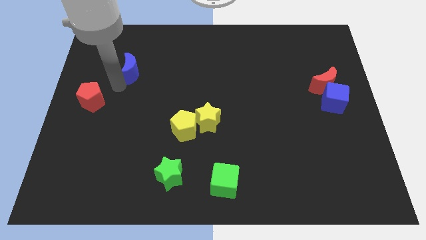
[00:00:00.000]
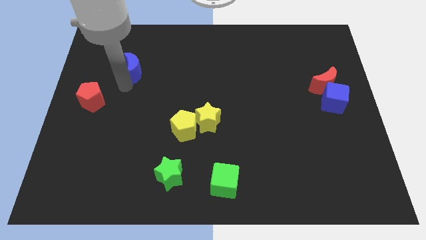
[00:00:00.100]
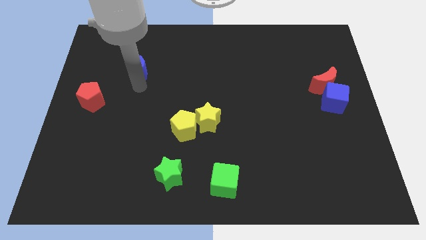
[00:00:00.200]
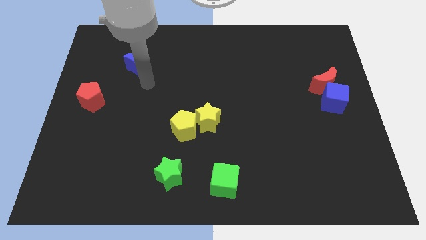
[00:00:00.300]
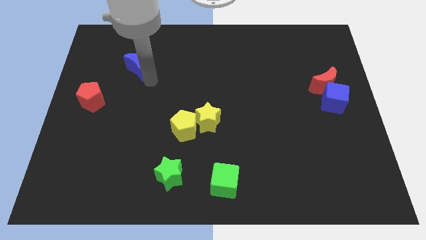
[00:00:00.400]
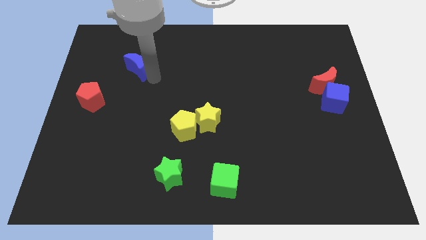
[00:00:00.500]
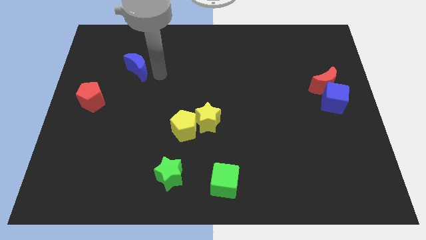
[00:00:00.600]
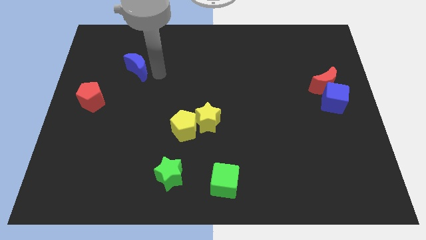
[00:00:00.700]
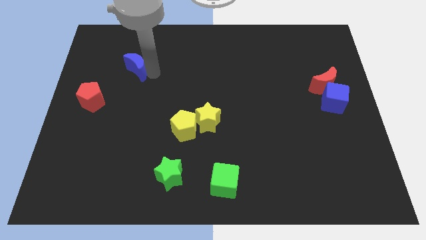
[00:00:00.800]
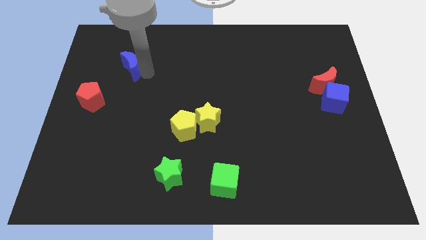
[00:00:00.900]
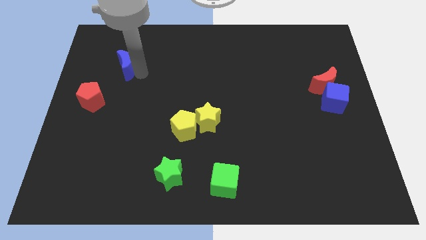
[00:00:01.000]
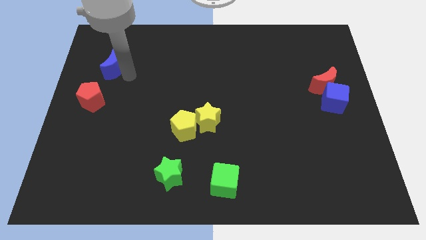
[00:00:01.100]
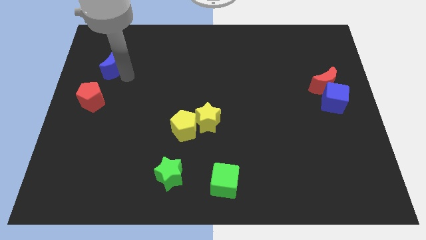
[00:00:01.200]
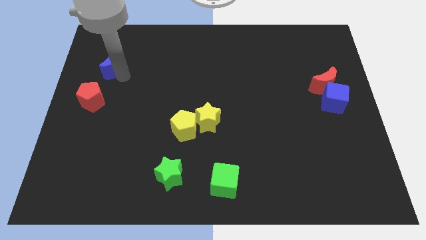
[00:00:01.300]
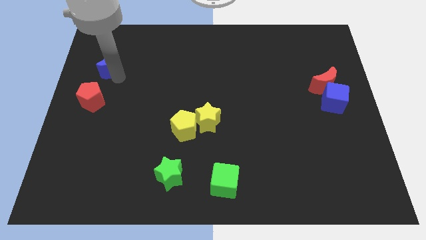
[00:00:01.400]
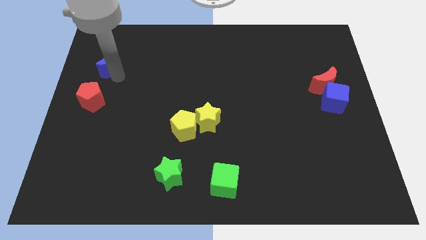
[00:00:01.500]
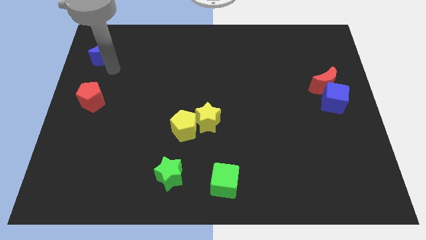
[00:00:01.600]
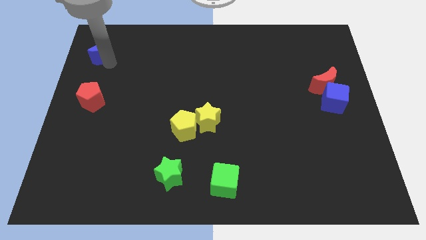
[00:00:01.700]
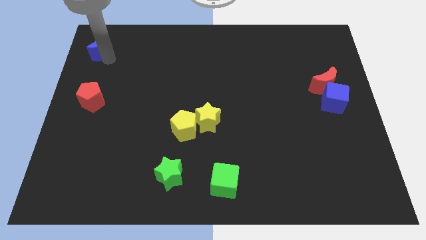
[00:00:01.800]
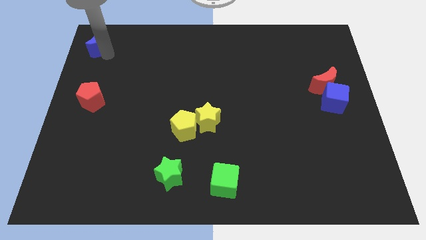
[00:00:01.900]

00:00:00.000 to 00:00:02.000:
push the blue moon upward

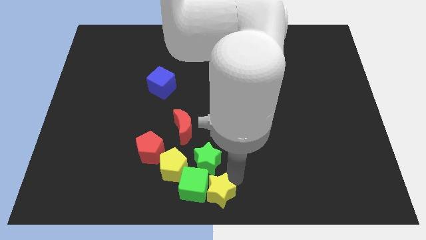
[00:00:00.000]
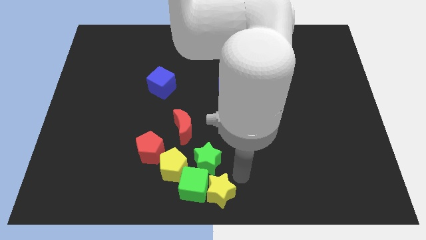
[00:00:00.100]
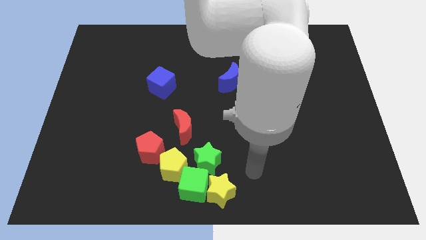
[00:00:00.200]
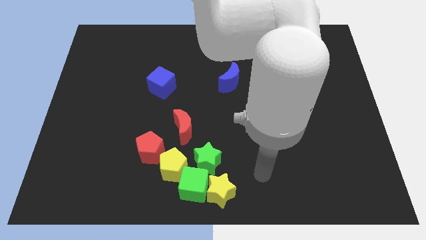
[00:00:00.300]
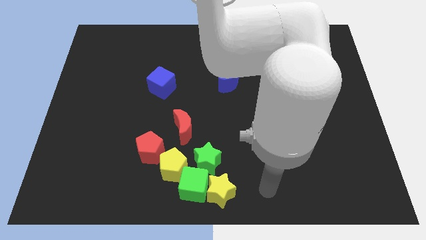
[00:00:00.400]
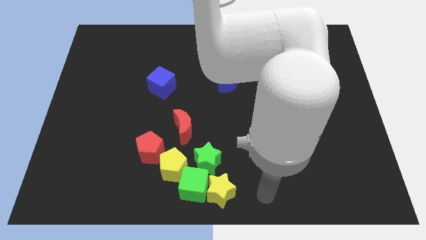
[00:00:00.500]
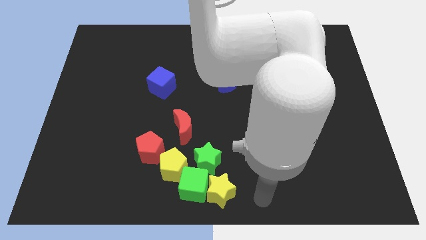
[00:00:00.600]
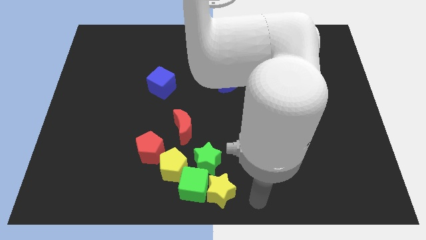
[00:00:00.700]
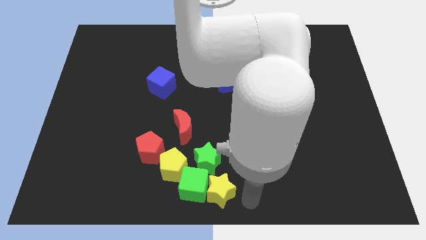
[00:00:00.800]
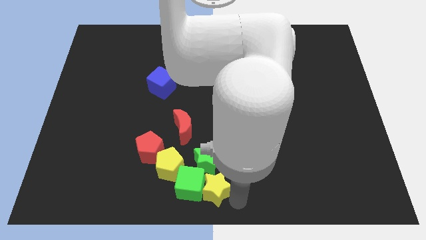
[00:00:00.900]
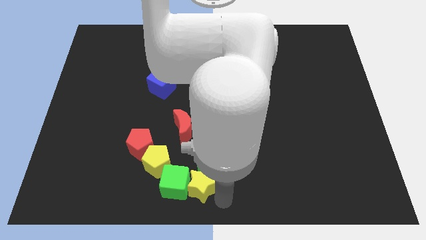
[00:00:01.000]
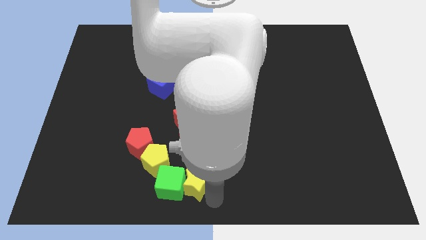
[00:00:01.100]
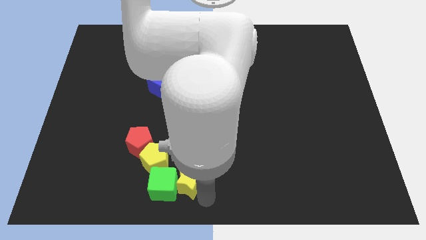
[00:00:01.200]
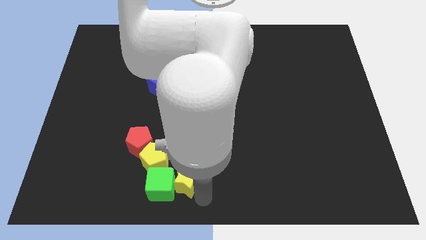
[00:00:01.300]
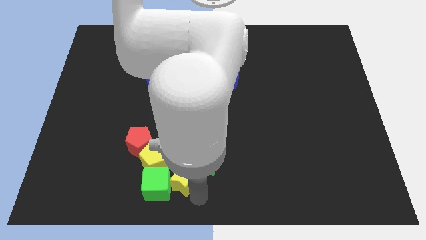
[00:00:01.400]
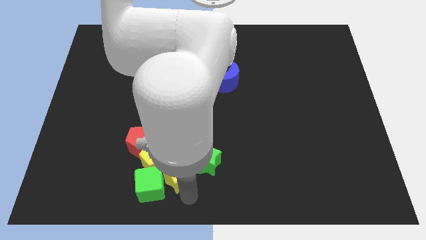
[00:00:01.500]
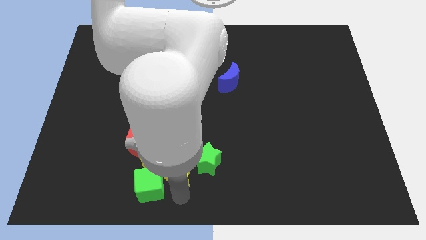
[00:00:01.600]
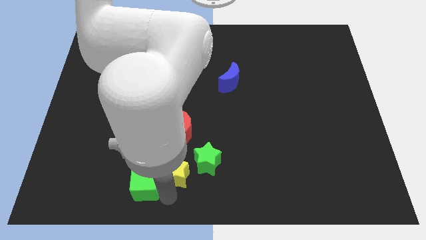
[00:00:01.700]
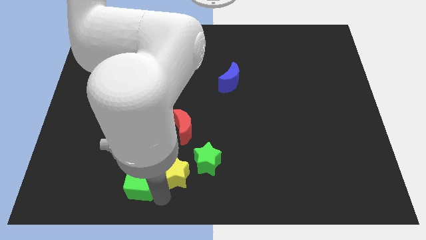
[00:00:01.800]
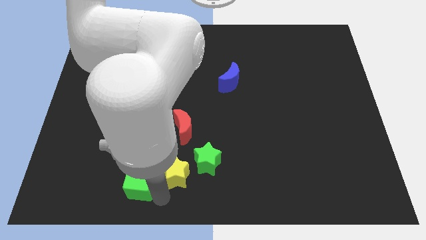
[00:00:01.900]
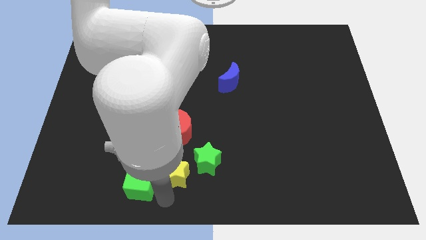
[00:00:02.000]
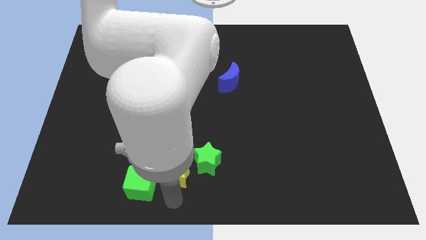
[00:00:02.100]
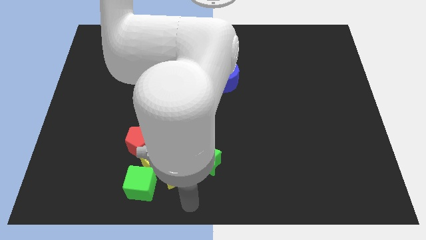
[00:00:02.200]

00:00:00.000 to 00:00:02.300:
push the yellow star and green cube below yellow pentagon

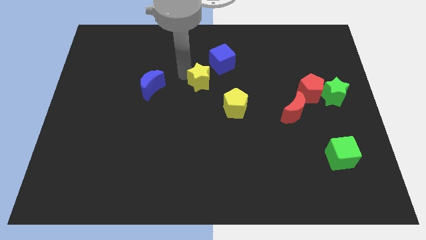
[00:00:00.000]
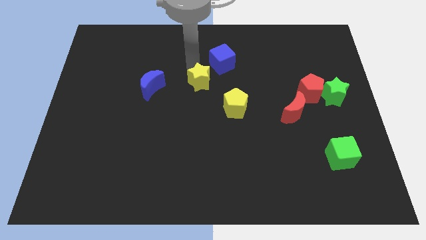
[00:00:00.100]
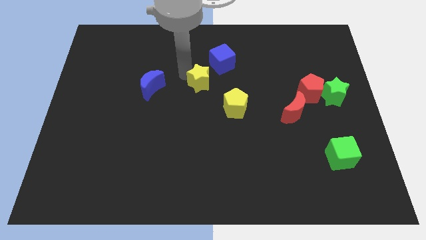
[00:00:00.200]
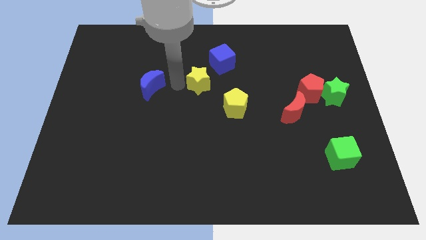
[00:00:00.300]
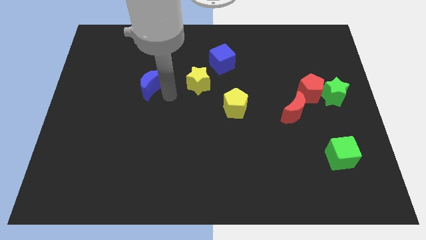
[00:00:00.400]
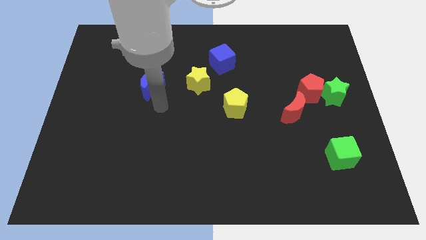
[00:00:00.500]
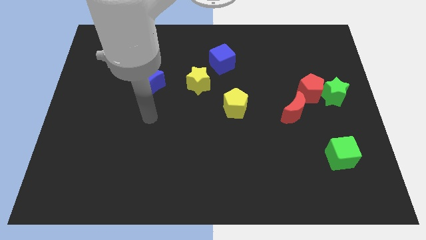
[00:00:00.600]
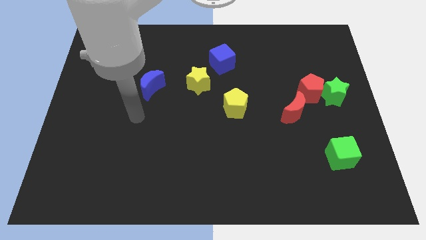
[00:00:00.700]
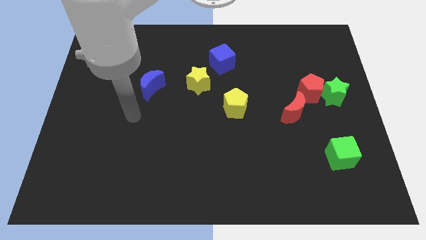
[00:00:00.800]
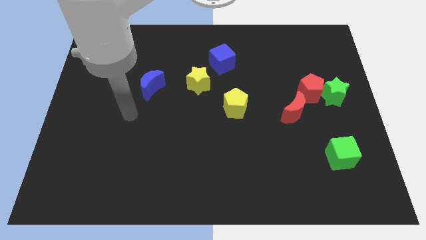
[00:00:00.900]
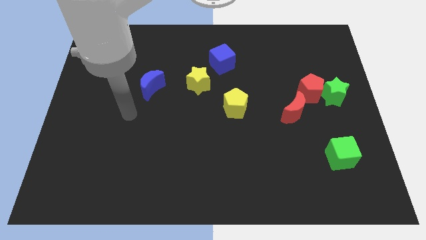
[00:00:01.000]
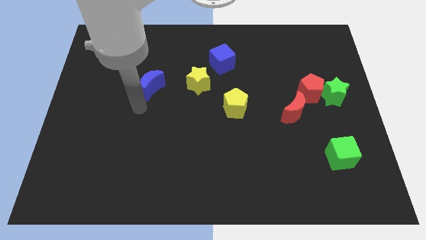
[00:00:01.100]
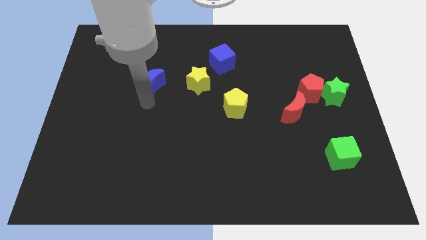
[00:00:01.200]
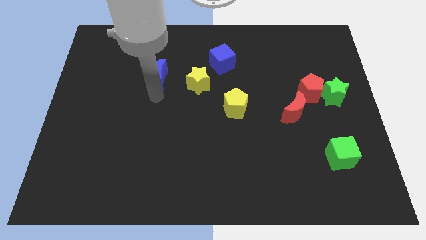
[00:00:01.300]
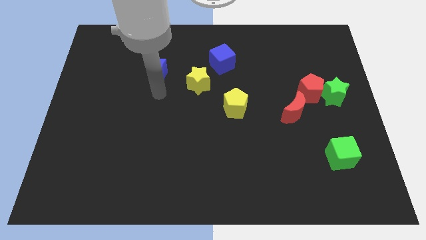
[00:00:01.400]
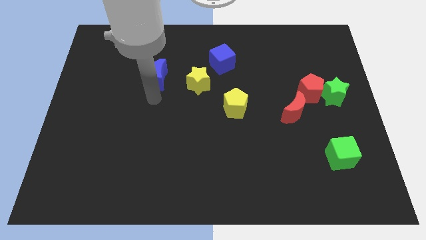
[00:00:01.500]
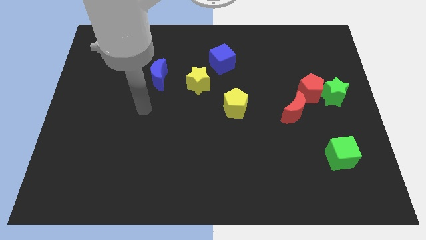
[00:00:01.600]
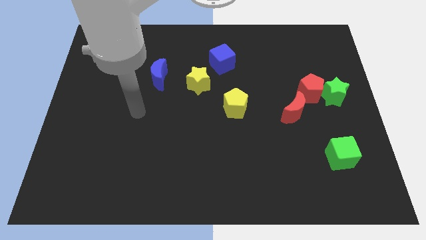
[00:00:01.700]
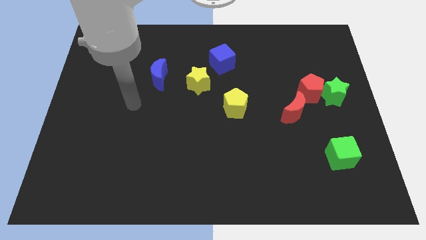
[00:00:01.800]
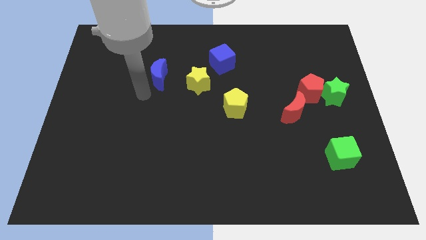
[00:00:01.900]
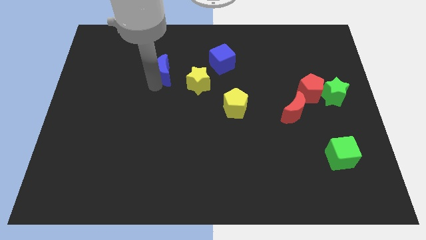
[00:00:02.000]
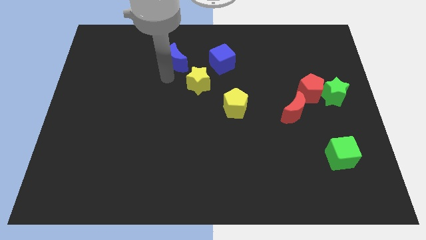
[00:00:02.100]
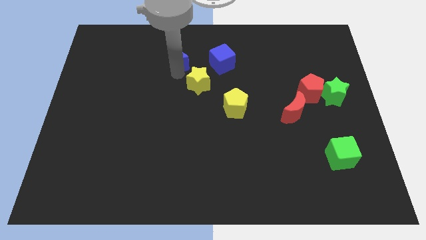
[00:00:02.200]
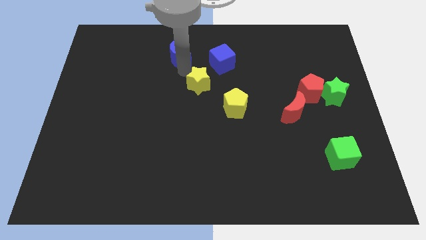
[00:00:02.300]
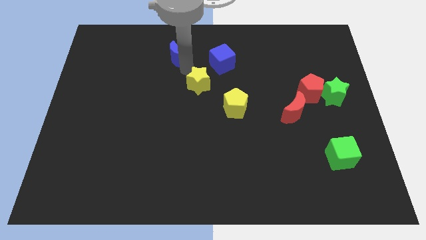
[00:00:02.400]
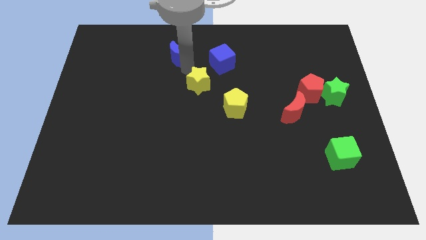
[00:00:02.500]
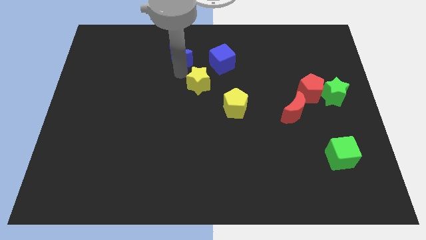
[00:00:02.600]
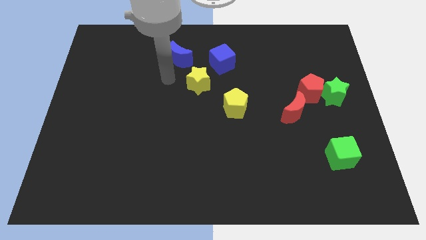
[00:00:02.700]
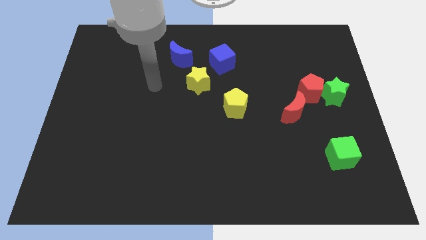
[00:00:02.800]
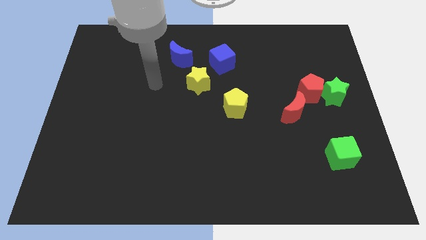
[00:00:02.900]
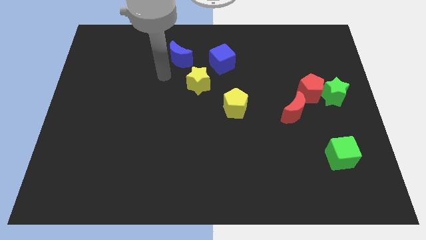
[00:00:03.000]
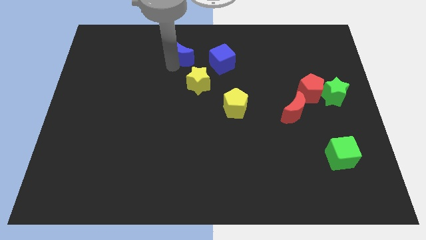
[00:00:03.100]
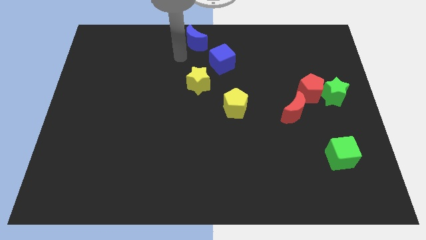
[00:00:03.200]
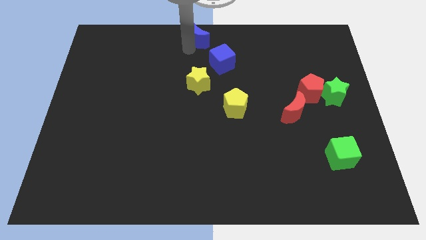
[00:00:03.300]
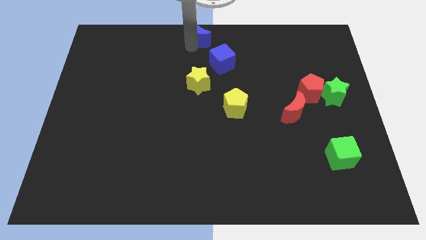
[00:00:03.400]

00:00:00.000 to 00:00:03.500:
place the blue crescent above the yellow star

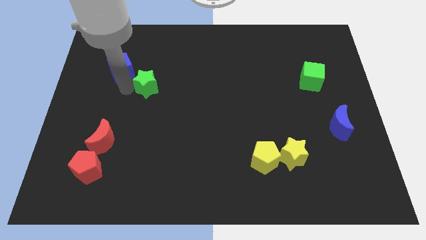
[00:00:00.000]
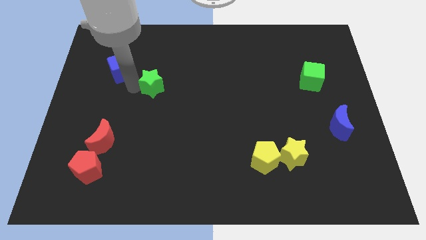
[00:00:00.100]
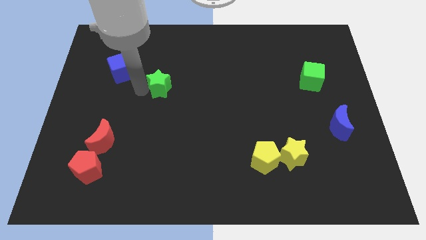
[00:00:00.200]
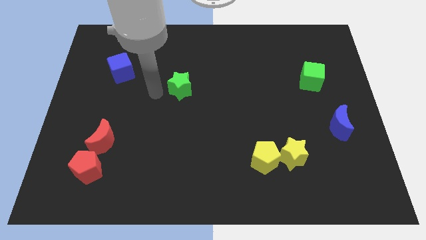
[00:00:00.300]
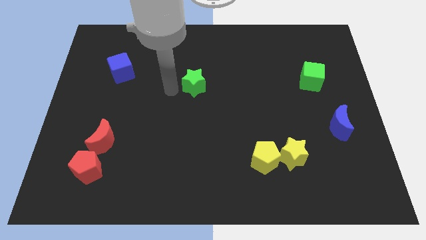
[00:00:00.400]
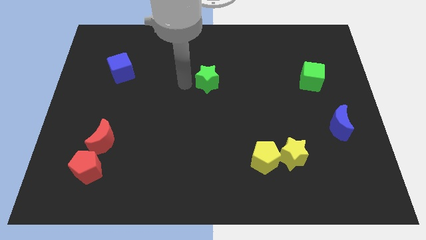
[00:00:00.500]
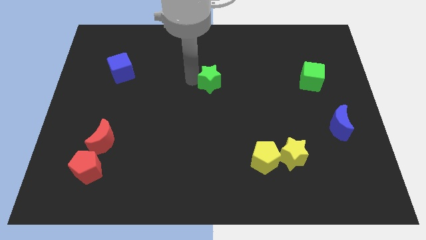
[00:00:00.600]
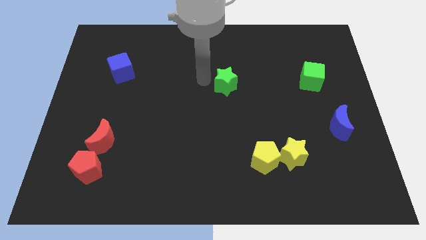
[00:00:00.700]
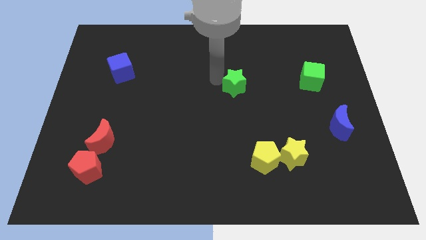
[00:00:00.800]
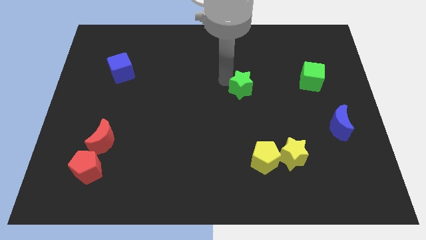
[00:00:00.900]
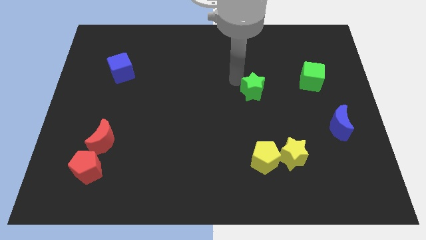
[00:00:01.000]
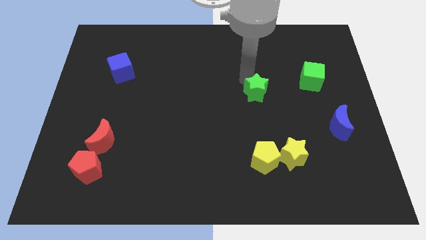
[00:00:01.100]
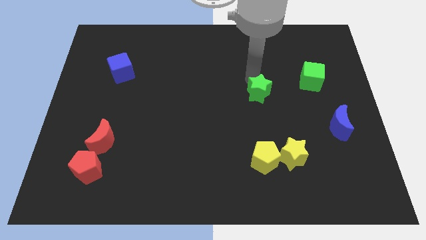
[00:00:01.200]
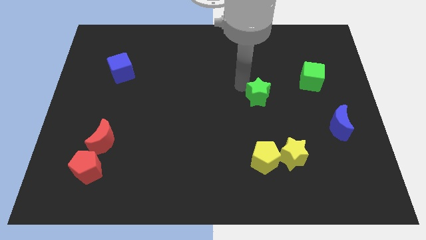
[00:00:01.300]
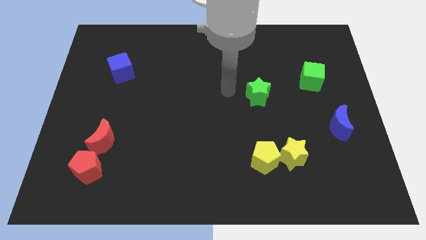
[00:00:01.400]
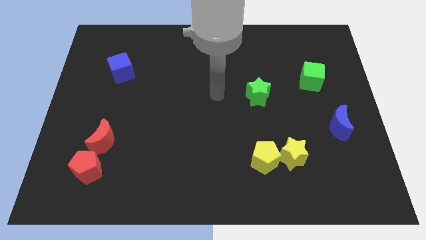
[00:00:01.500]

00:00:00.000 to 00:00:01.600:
place the green star above the yellow pentagon
